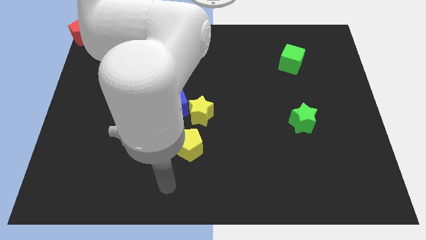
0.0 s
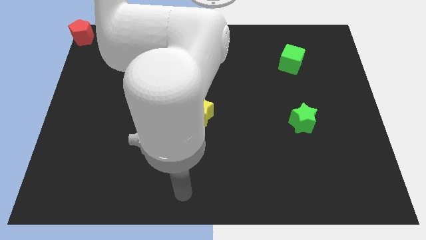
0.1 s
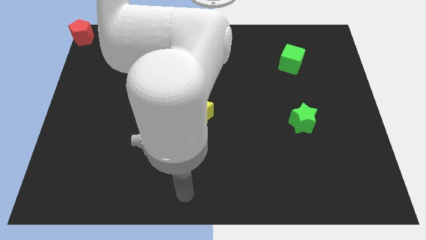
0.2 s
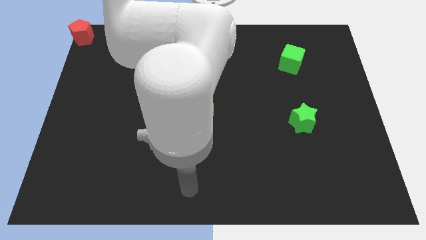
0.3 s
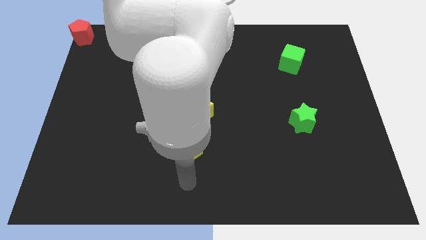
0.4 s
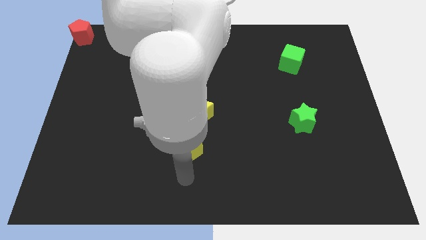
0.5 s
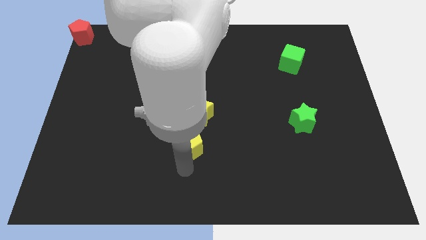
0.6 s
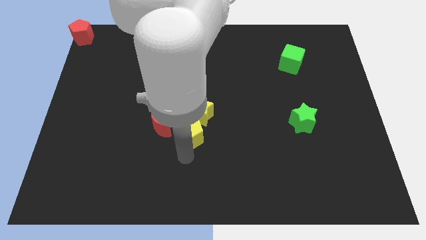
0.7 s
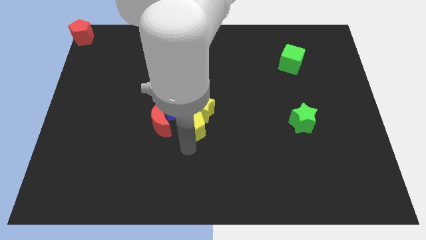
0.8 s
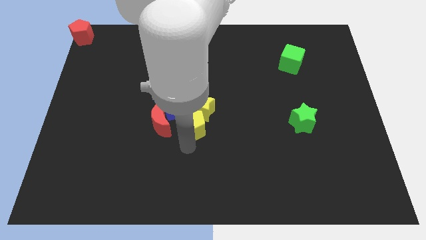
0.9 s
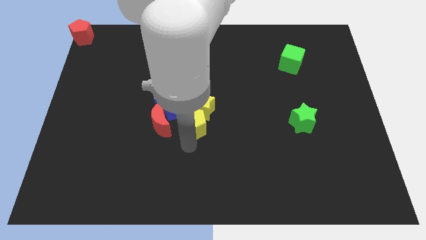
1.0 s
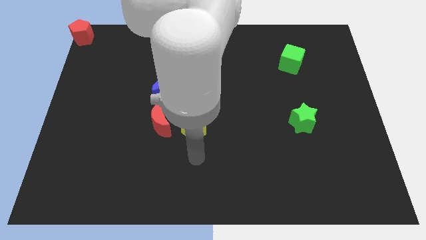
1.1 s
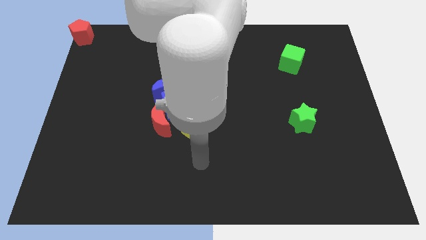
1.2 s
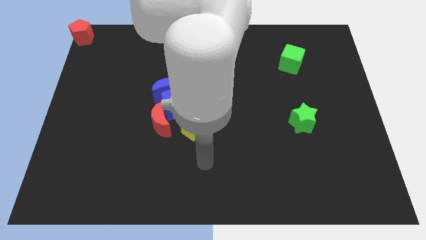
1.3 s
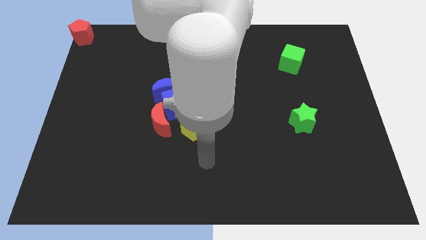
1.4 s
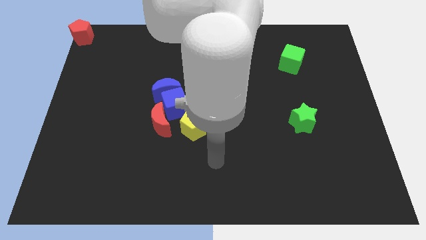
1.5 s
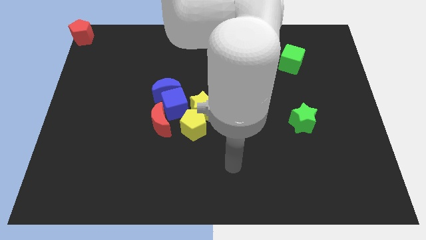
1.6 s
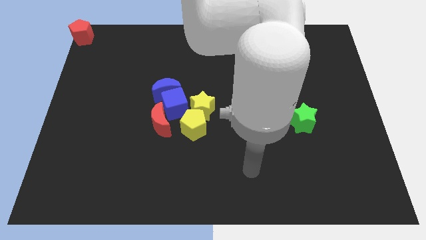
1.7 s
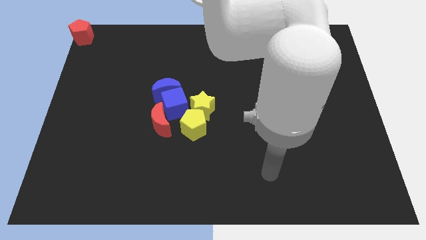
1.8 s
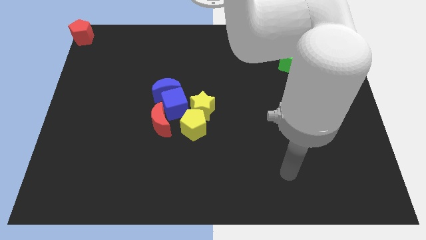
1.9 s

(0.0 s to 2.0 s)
push the yellow star towards the center using the yellow pentagon

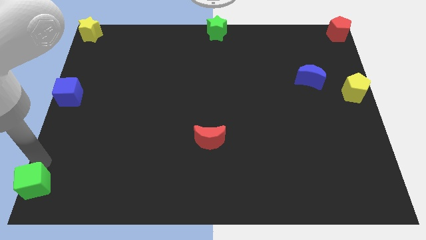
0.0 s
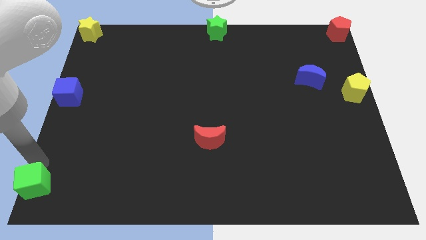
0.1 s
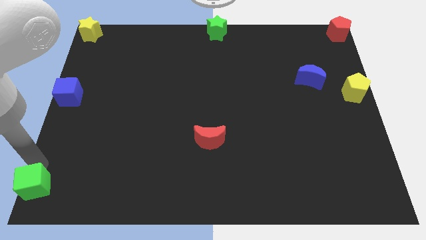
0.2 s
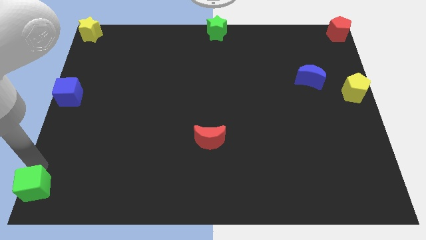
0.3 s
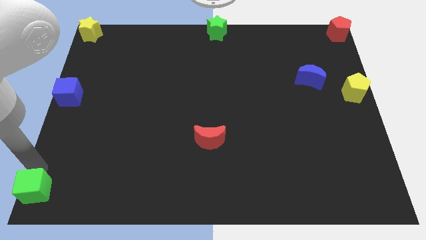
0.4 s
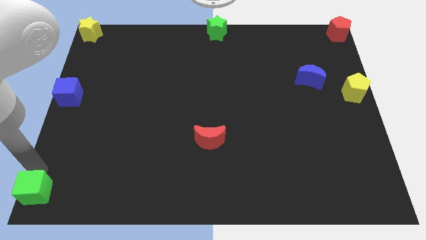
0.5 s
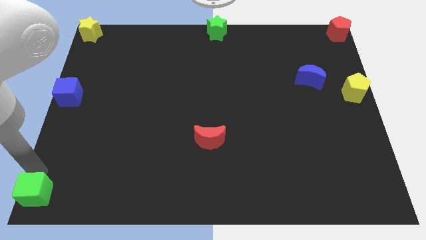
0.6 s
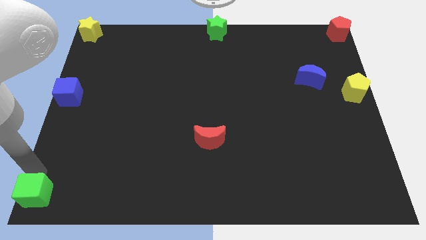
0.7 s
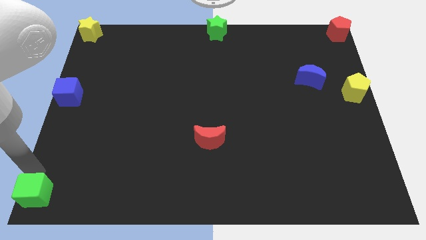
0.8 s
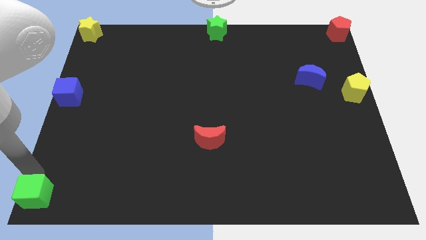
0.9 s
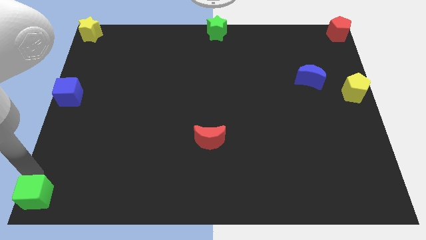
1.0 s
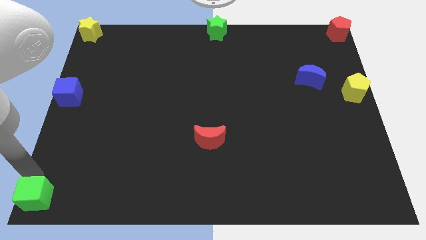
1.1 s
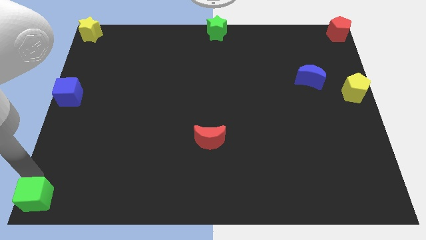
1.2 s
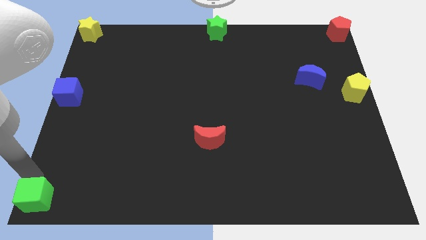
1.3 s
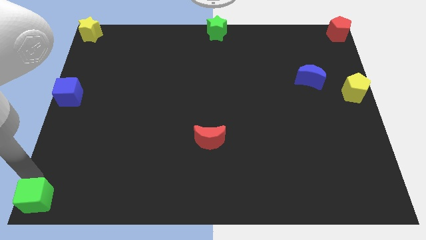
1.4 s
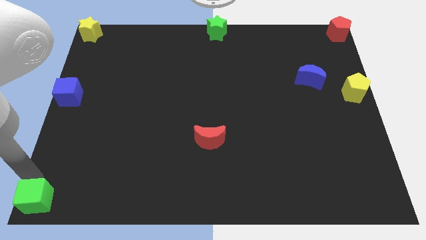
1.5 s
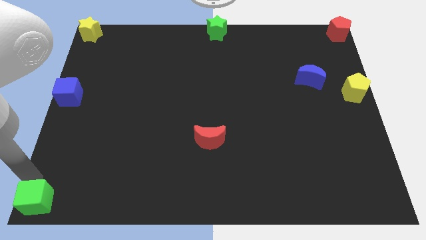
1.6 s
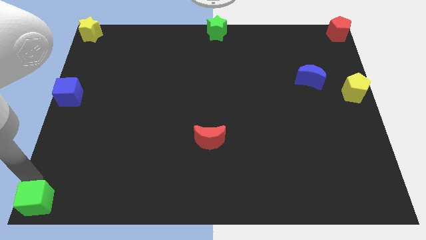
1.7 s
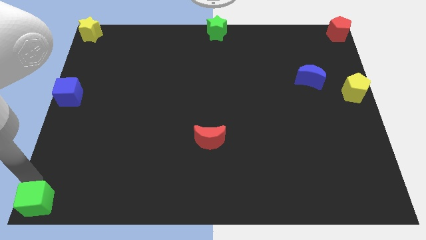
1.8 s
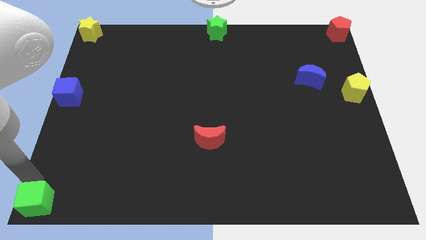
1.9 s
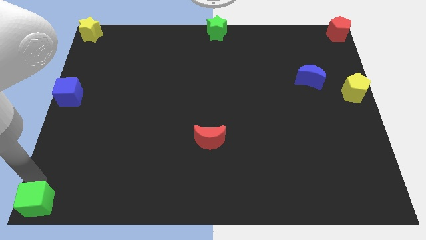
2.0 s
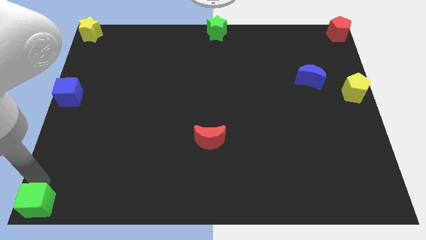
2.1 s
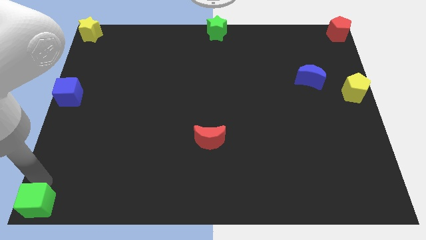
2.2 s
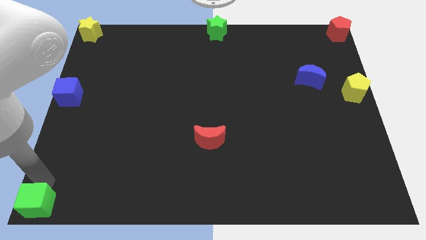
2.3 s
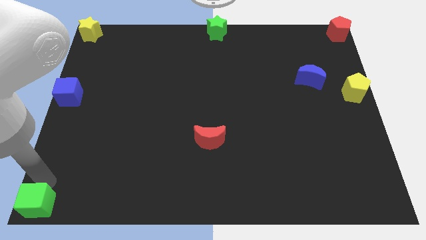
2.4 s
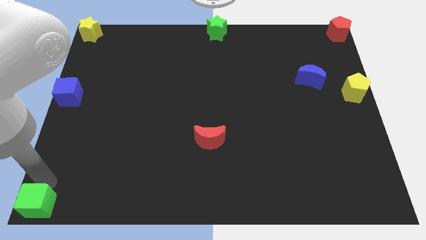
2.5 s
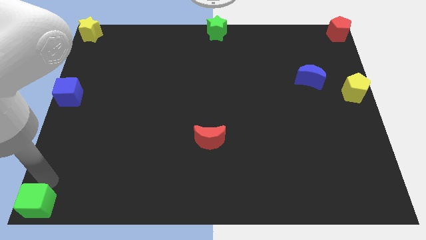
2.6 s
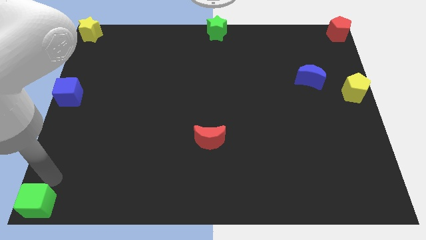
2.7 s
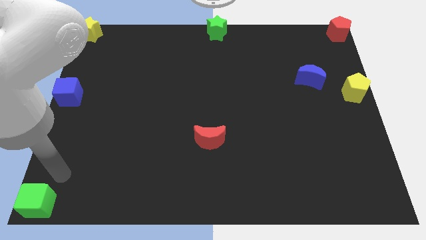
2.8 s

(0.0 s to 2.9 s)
move the green cube to the bottom left corner of the board

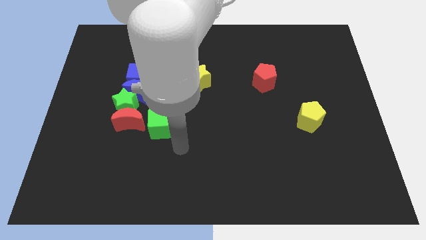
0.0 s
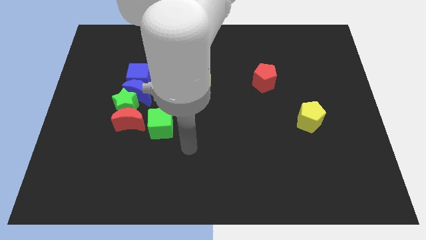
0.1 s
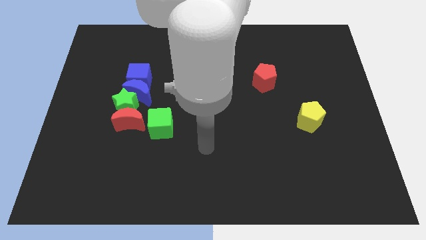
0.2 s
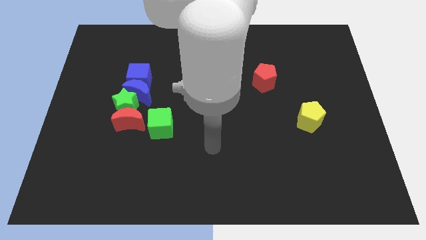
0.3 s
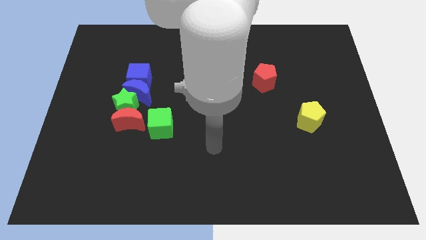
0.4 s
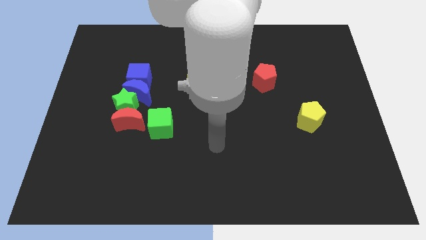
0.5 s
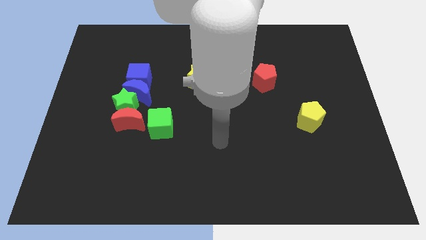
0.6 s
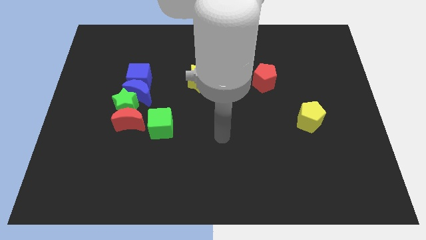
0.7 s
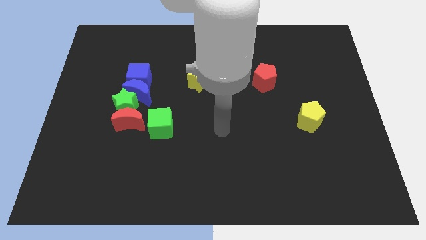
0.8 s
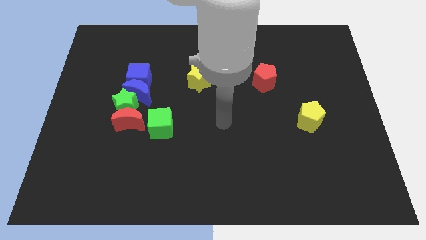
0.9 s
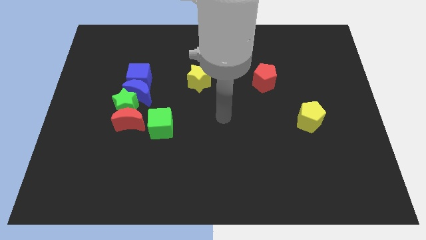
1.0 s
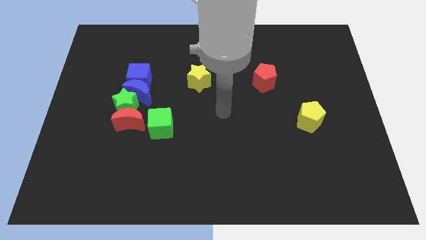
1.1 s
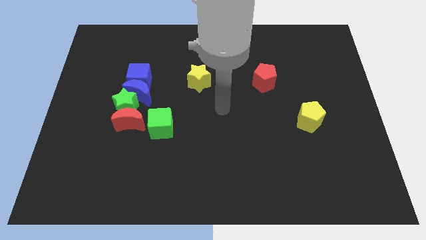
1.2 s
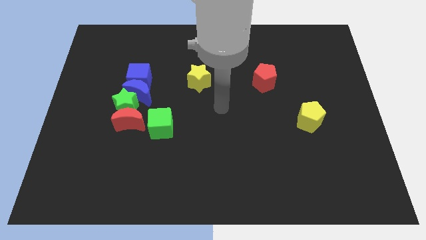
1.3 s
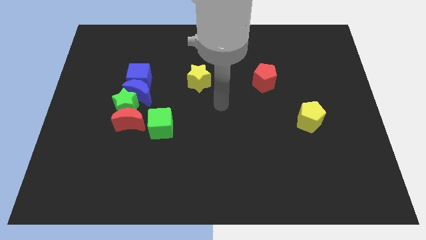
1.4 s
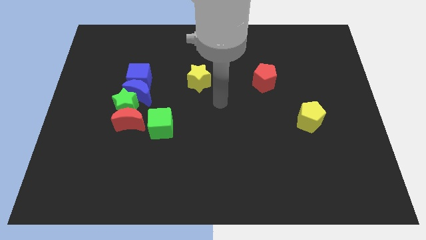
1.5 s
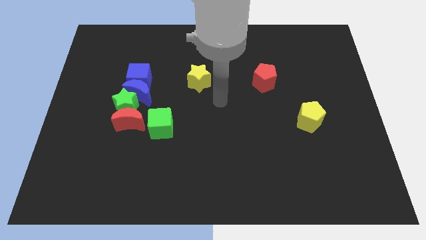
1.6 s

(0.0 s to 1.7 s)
move the arm away from the green cube

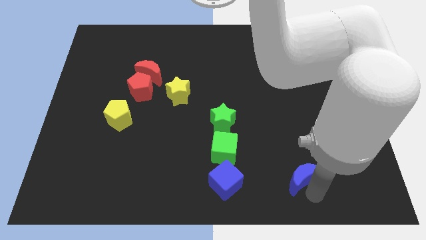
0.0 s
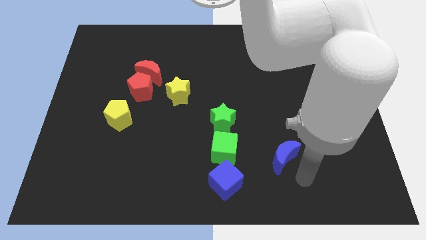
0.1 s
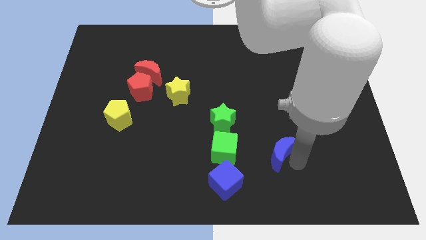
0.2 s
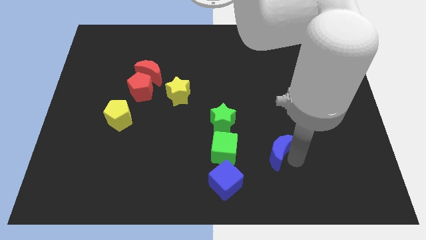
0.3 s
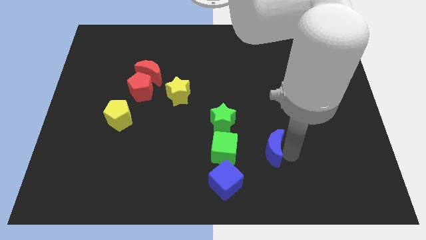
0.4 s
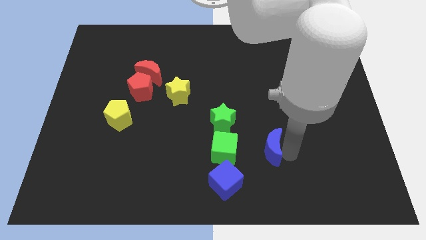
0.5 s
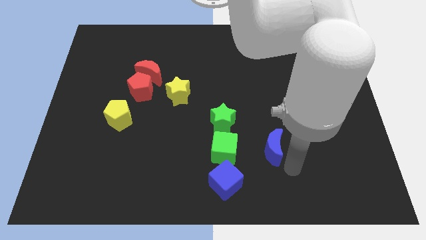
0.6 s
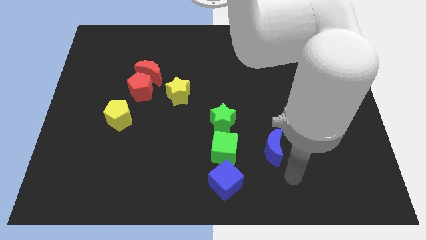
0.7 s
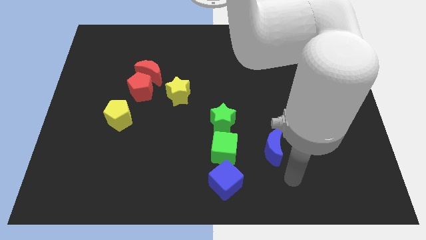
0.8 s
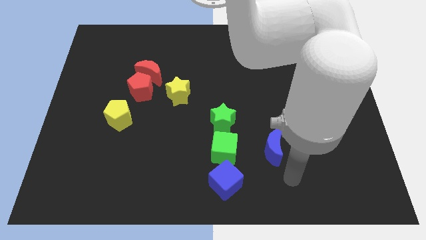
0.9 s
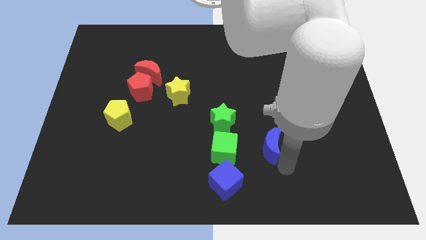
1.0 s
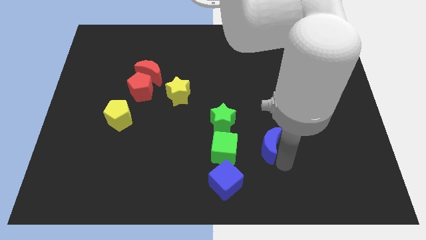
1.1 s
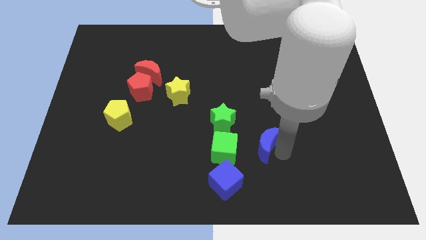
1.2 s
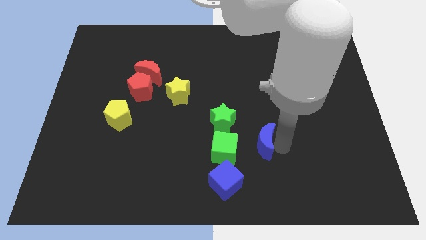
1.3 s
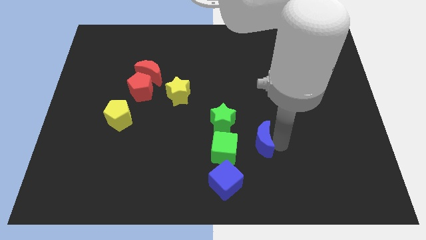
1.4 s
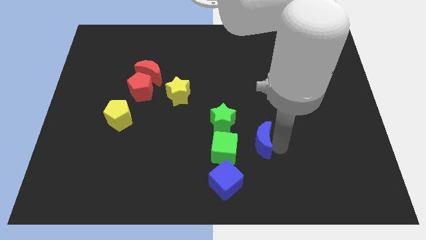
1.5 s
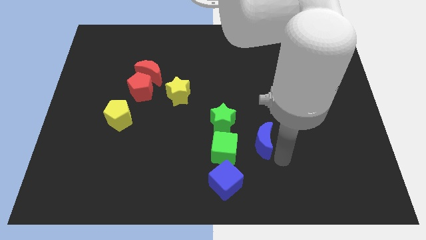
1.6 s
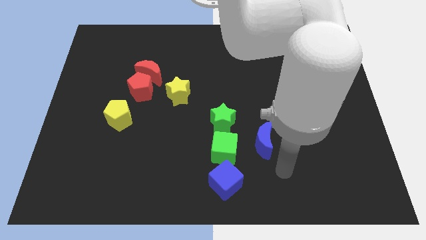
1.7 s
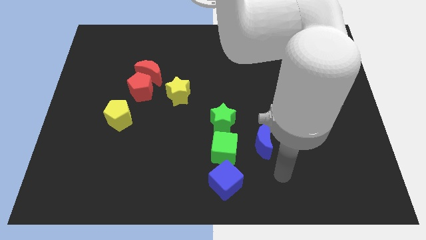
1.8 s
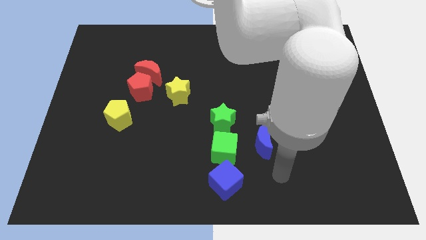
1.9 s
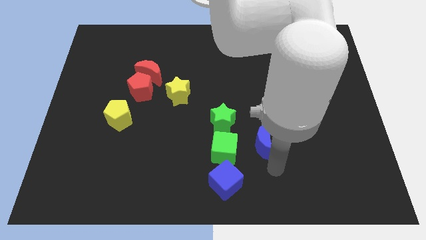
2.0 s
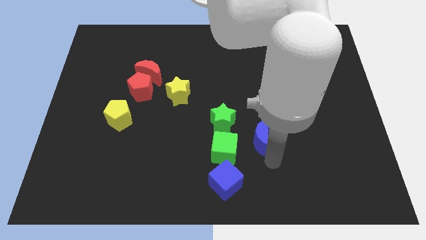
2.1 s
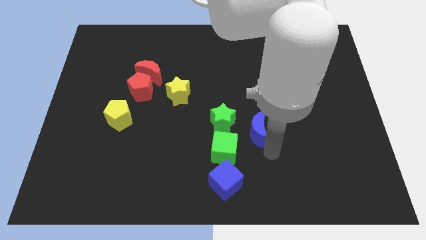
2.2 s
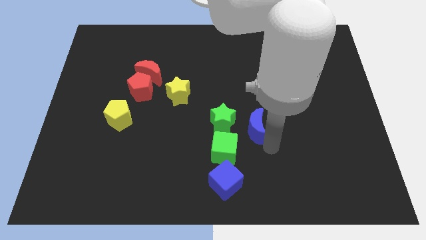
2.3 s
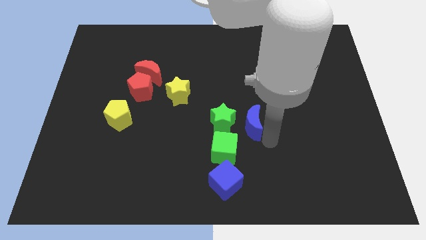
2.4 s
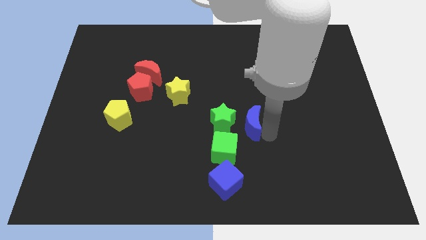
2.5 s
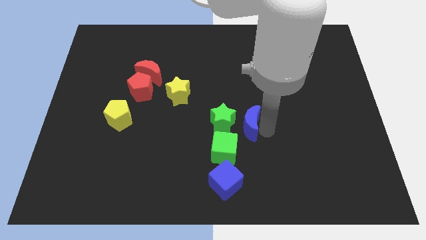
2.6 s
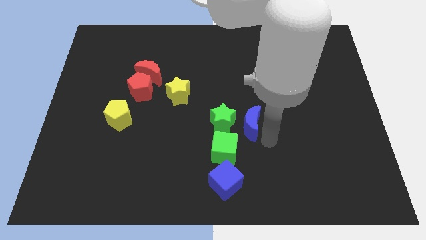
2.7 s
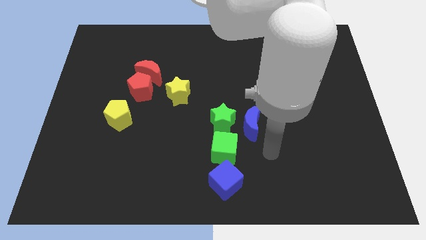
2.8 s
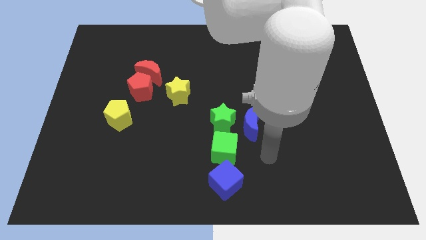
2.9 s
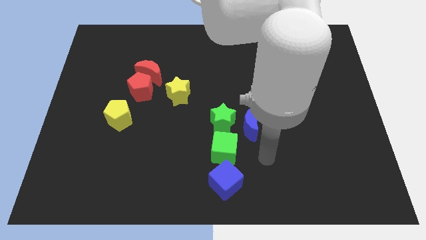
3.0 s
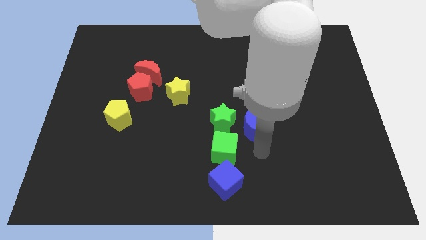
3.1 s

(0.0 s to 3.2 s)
move the blue moon near to the green star
